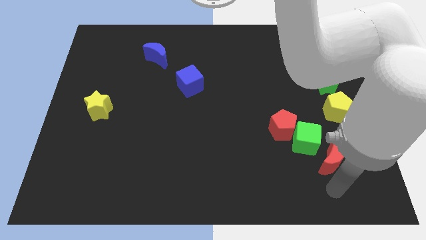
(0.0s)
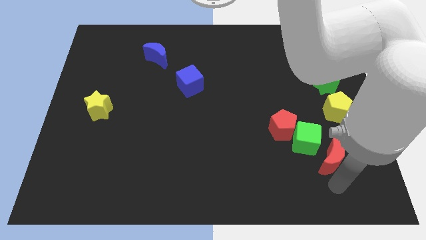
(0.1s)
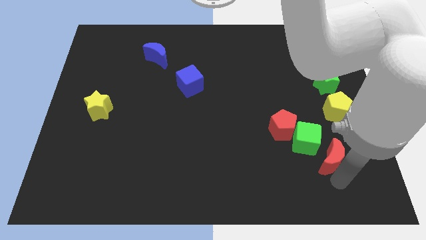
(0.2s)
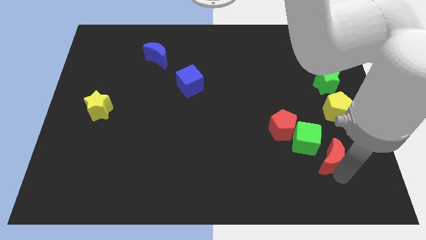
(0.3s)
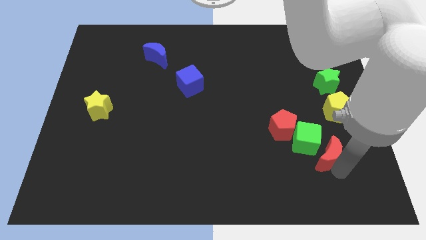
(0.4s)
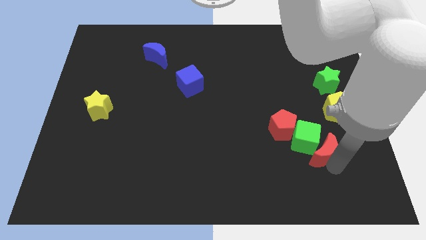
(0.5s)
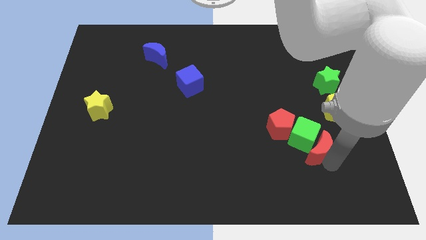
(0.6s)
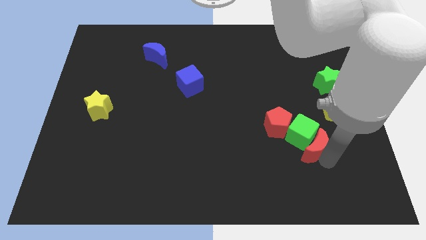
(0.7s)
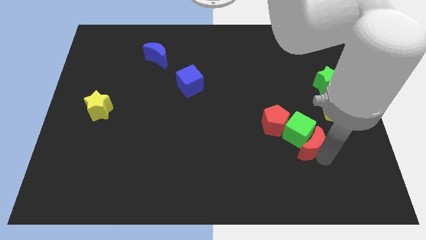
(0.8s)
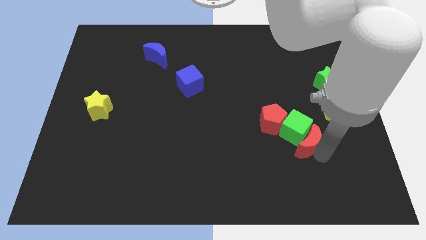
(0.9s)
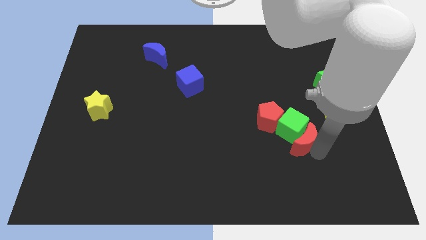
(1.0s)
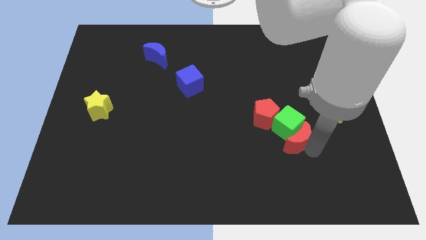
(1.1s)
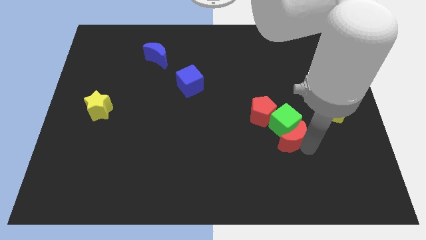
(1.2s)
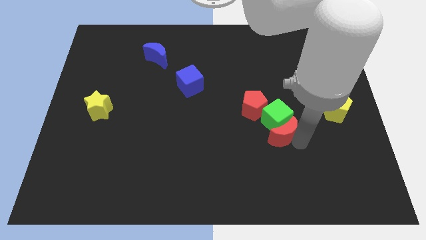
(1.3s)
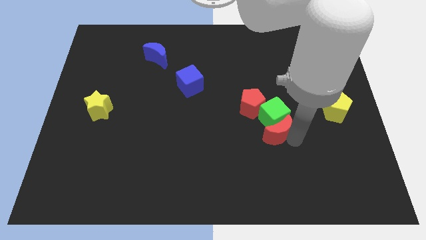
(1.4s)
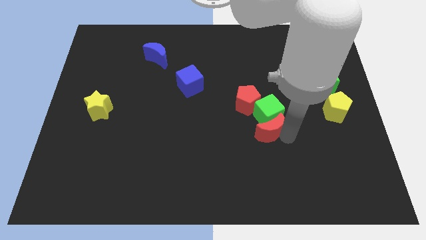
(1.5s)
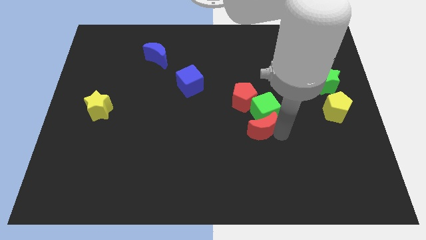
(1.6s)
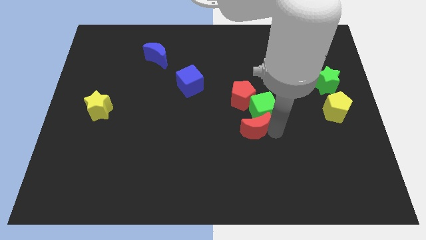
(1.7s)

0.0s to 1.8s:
push the red moon into the green cube

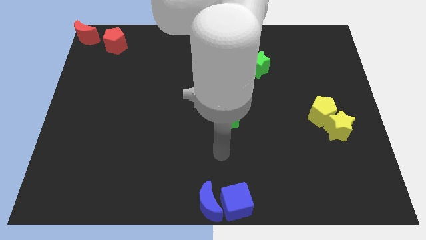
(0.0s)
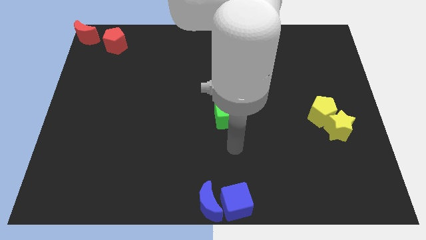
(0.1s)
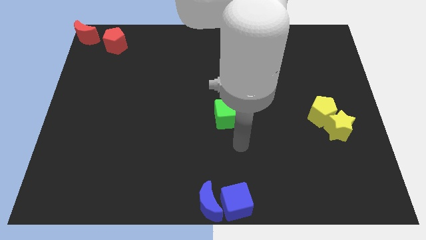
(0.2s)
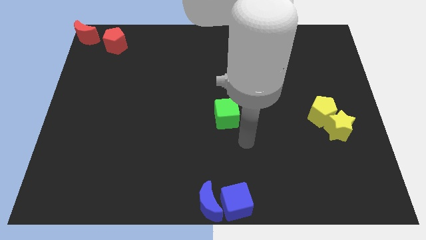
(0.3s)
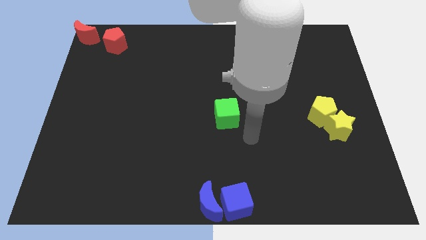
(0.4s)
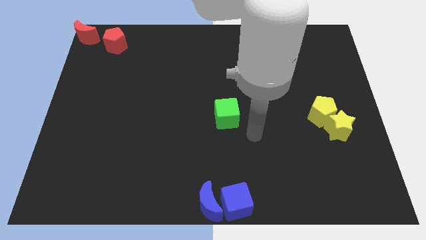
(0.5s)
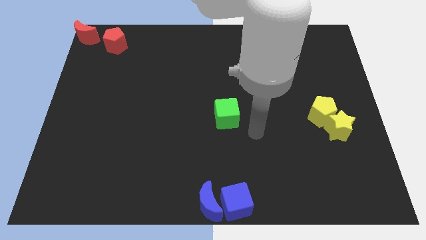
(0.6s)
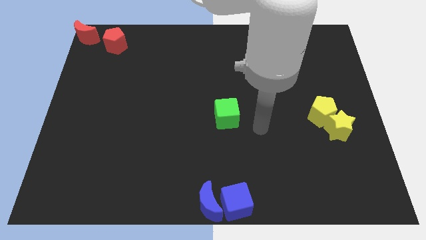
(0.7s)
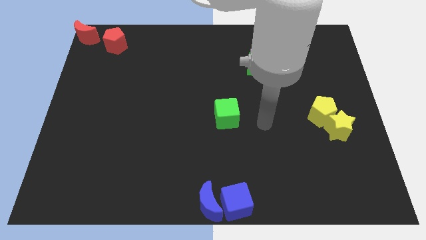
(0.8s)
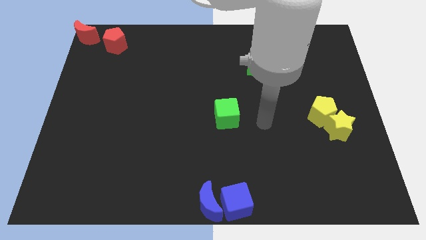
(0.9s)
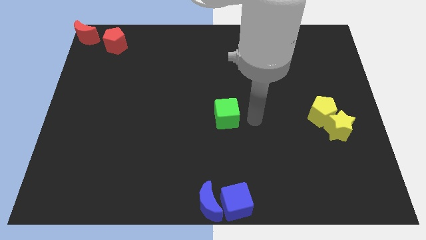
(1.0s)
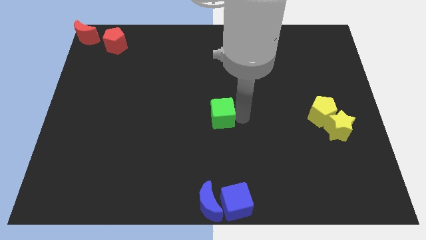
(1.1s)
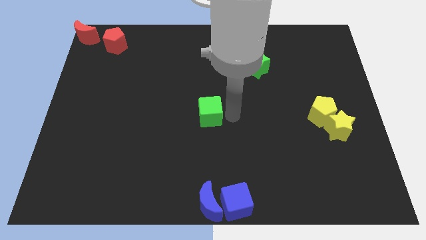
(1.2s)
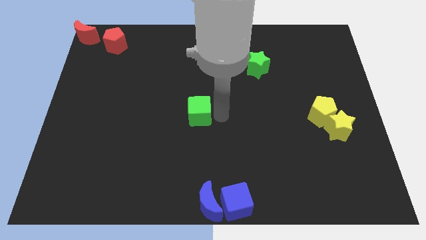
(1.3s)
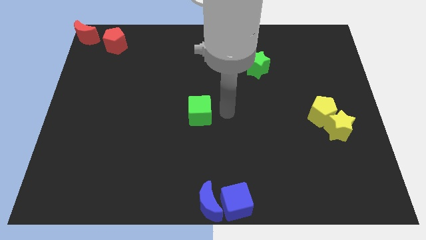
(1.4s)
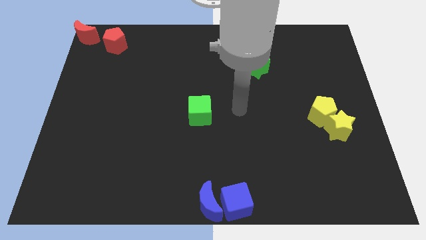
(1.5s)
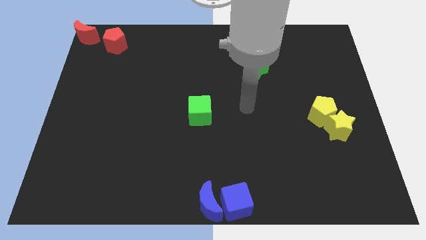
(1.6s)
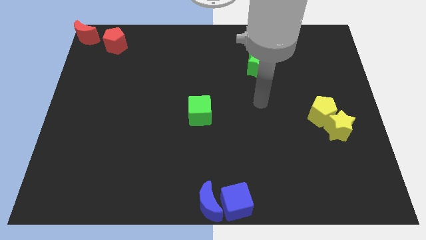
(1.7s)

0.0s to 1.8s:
push the green cube to the left side of the board

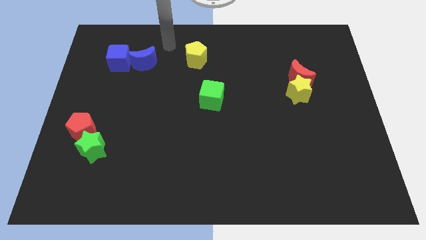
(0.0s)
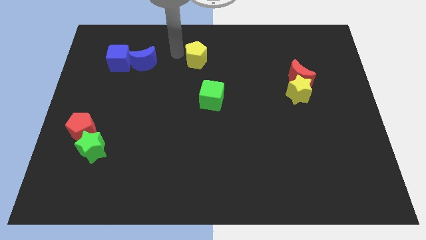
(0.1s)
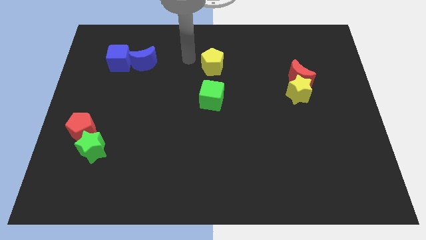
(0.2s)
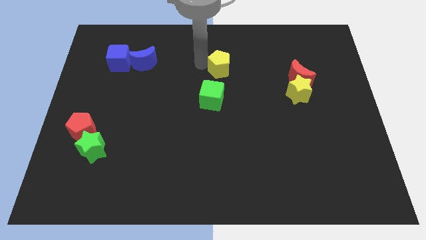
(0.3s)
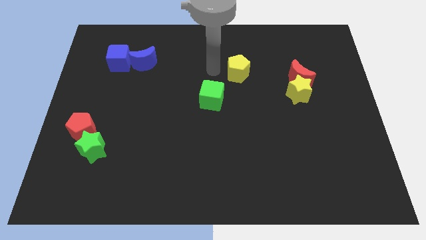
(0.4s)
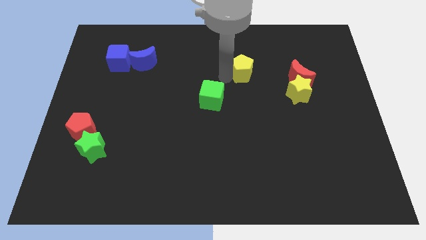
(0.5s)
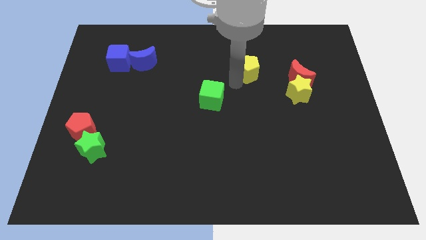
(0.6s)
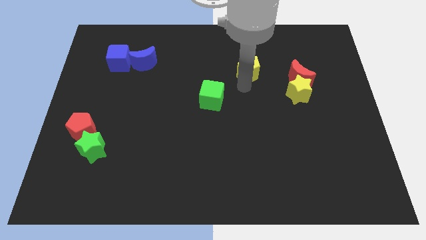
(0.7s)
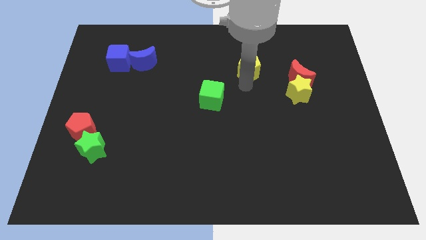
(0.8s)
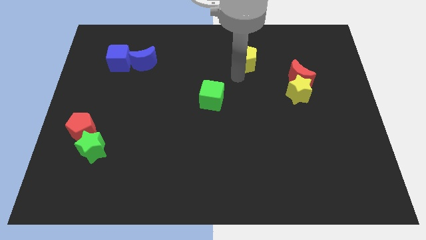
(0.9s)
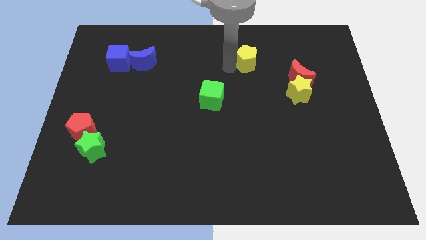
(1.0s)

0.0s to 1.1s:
move the yellow pentagon to the top right of the green cube

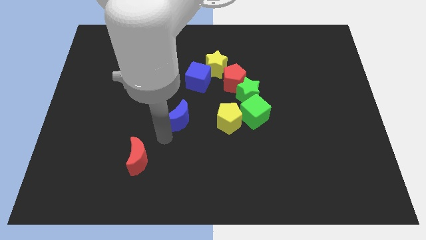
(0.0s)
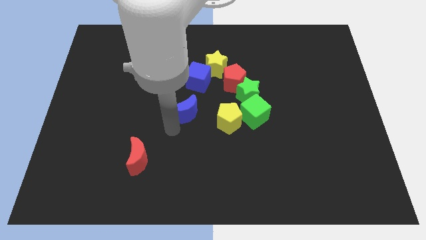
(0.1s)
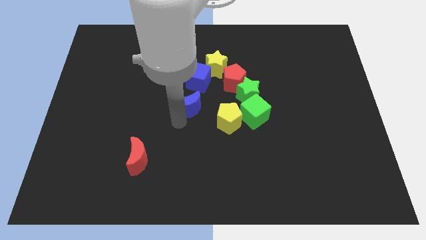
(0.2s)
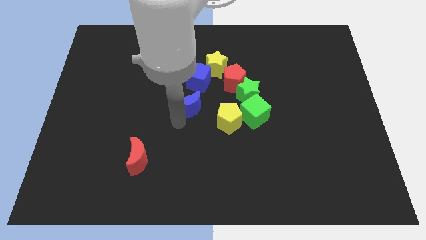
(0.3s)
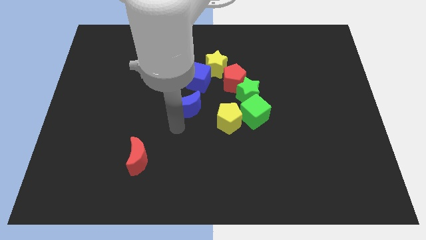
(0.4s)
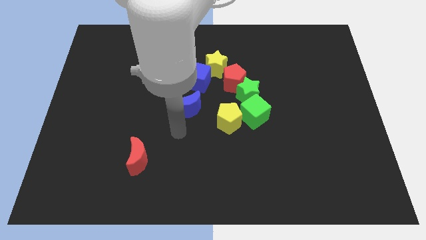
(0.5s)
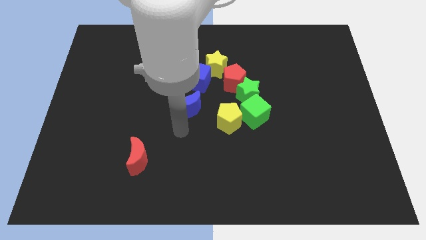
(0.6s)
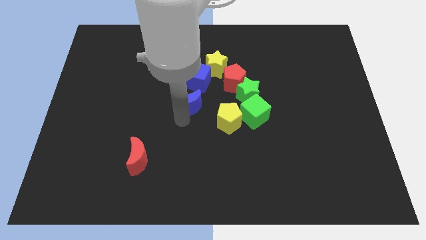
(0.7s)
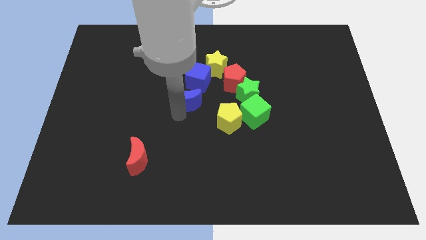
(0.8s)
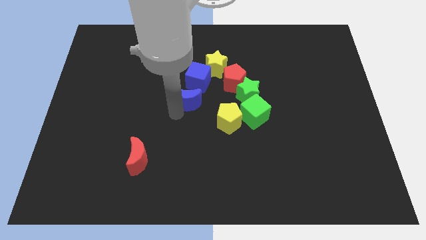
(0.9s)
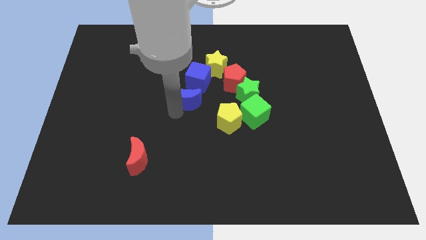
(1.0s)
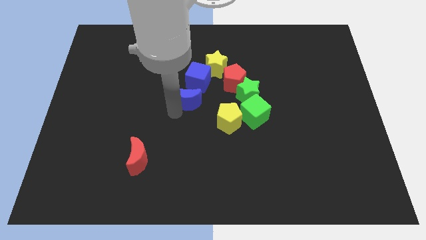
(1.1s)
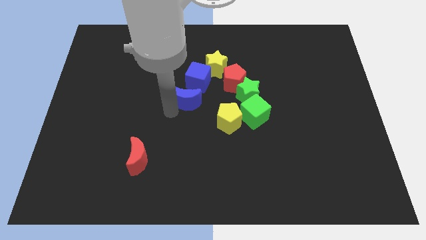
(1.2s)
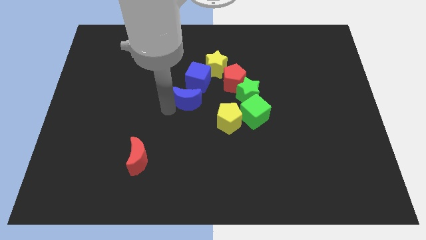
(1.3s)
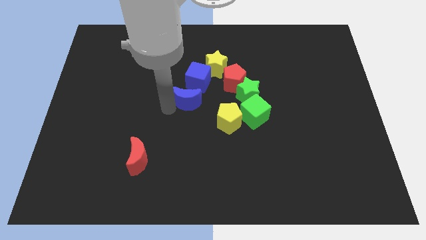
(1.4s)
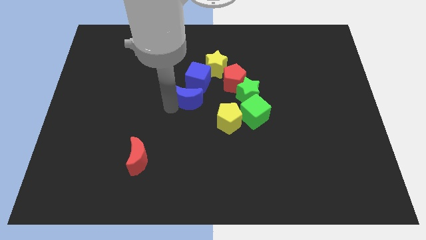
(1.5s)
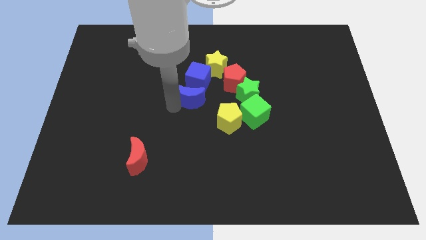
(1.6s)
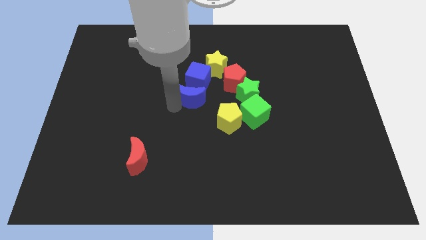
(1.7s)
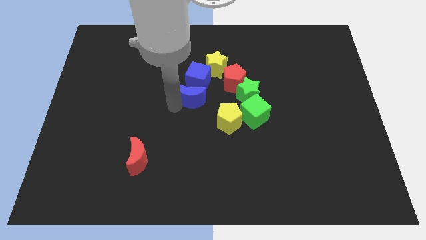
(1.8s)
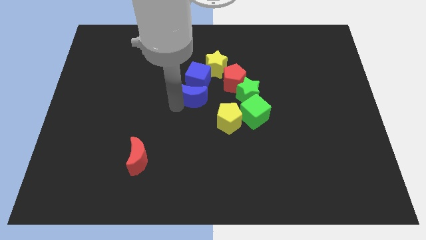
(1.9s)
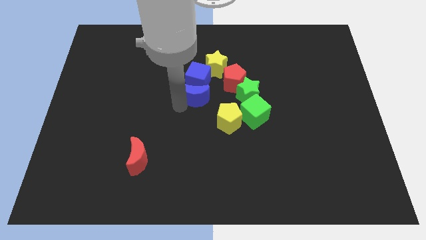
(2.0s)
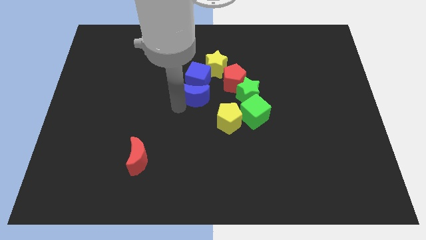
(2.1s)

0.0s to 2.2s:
push the blue crescent towards the bottom side of the blue cube

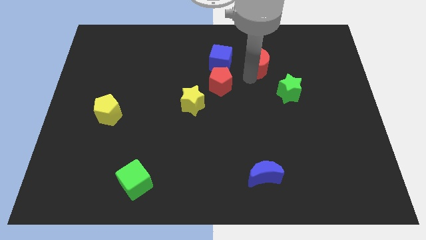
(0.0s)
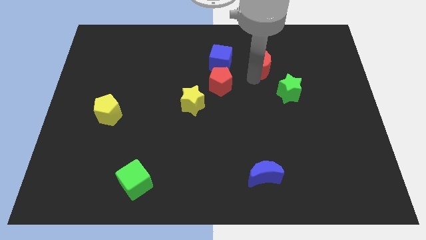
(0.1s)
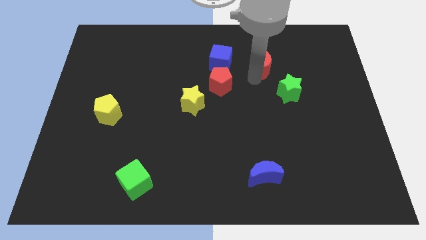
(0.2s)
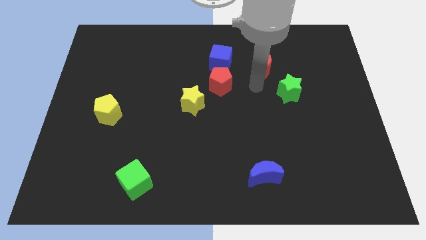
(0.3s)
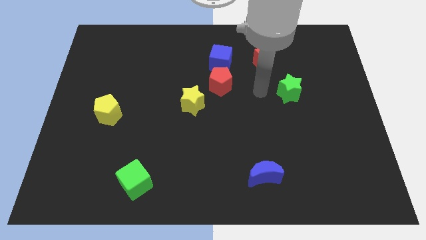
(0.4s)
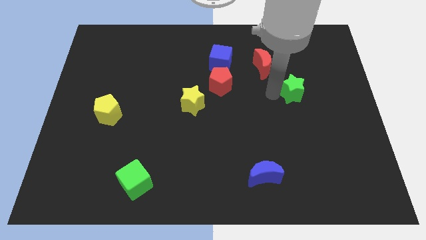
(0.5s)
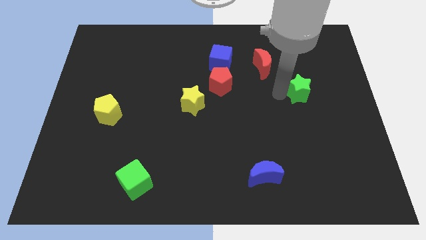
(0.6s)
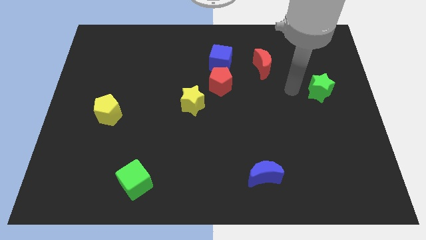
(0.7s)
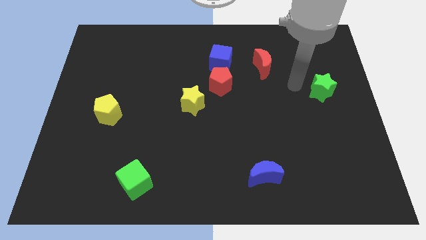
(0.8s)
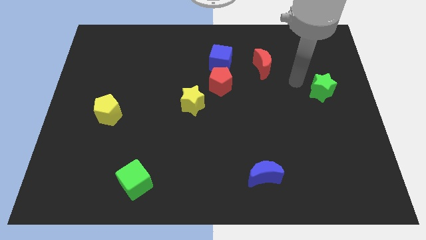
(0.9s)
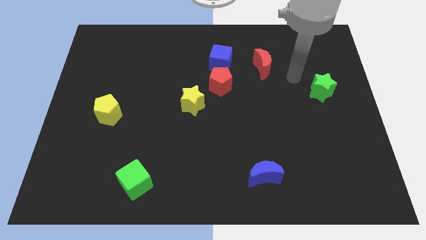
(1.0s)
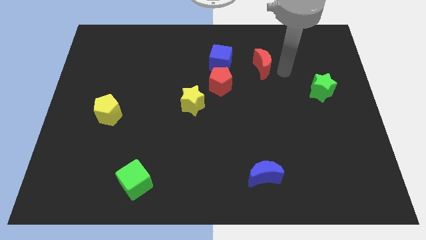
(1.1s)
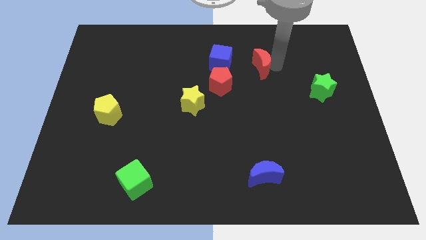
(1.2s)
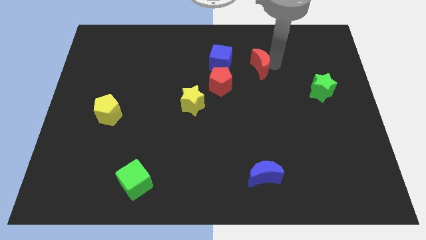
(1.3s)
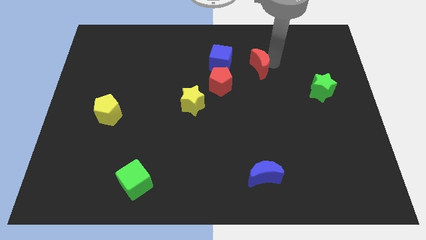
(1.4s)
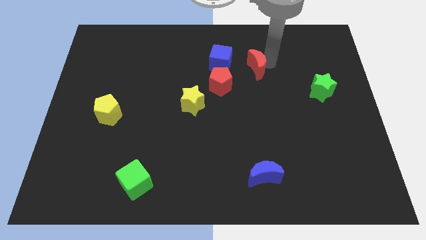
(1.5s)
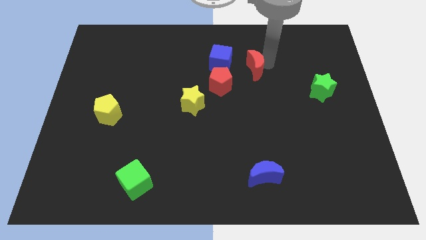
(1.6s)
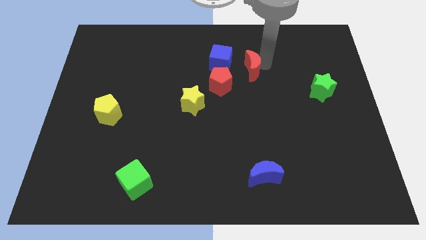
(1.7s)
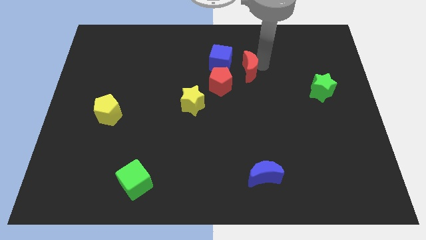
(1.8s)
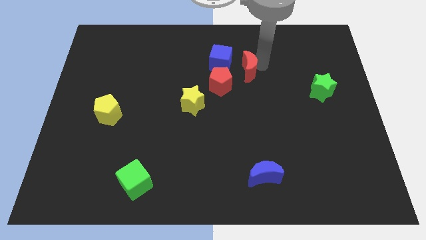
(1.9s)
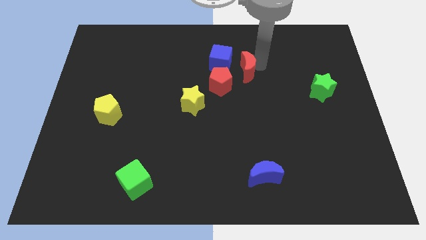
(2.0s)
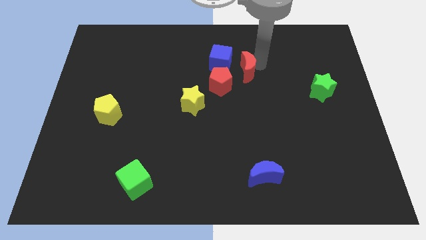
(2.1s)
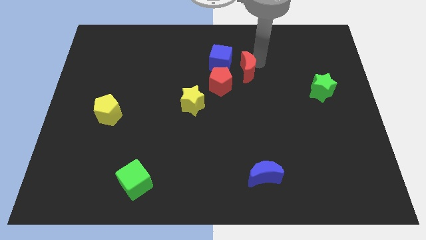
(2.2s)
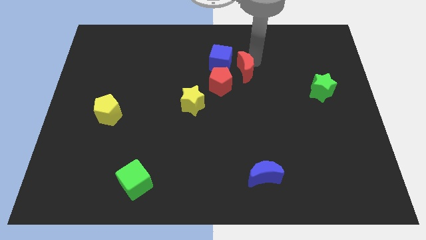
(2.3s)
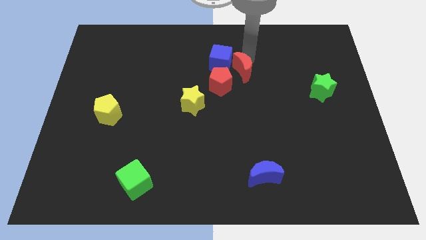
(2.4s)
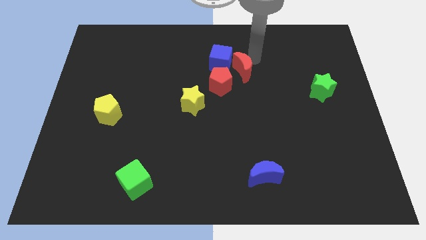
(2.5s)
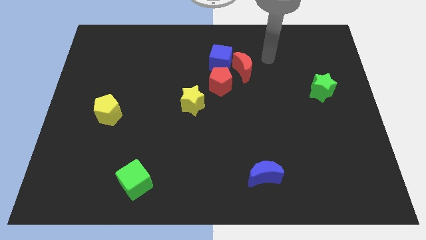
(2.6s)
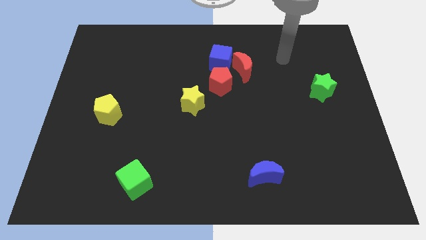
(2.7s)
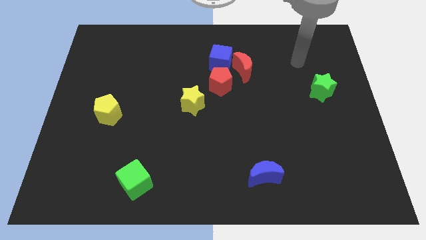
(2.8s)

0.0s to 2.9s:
move red moon towards blue cube
